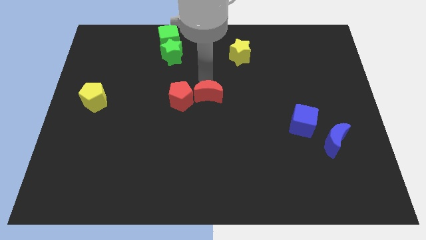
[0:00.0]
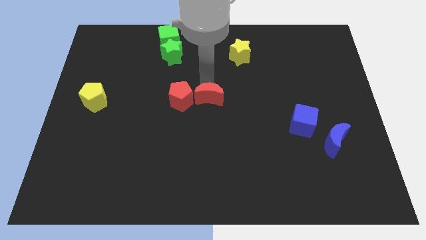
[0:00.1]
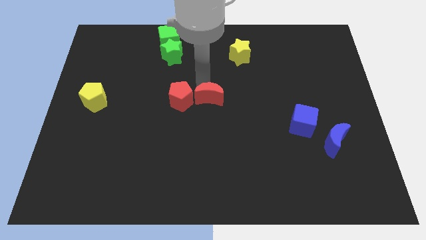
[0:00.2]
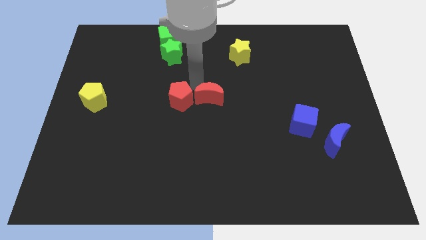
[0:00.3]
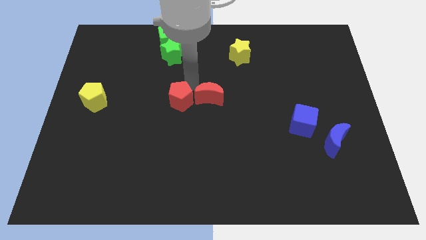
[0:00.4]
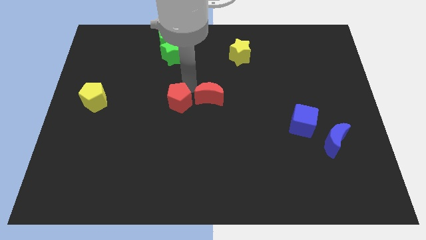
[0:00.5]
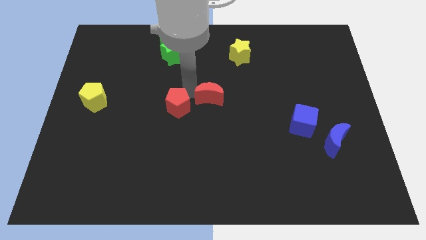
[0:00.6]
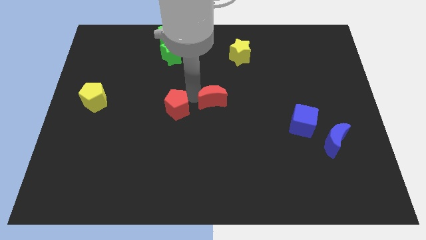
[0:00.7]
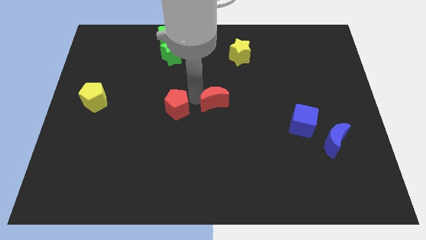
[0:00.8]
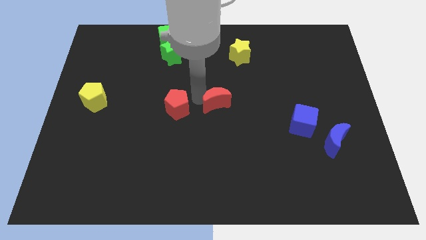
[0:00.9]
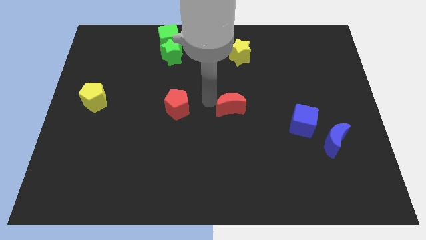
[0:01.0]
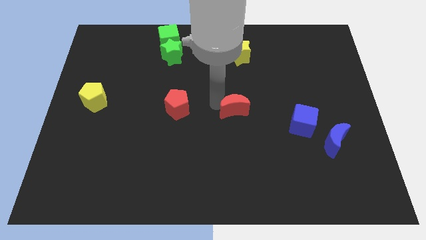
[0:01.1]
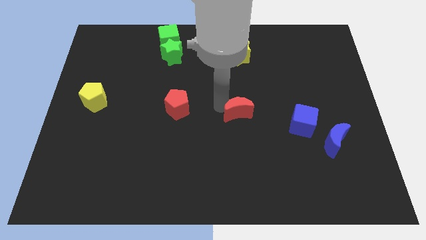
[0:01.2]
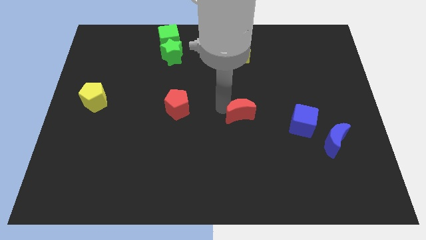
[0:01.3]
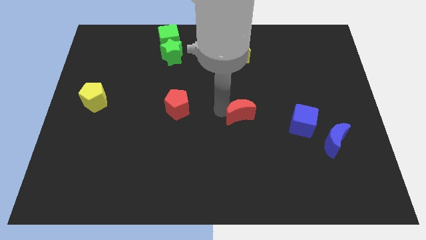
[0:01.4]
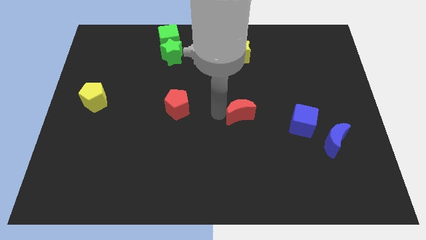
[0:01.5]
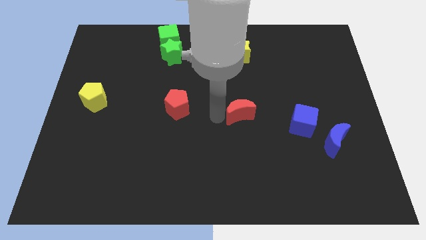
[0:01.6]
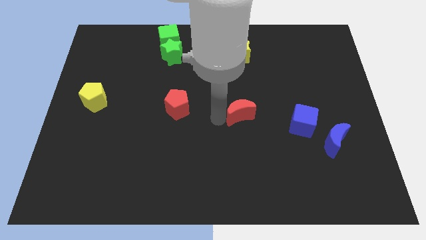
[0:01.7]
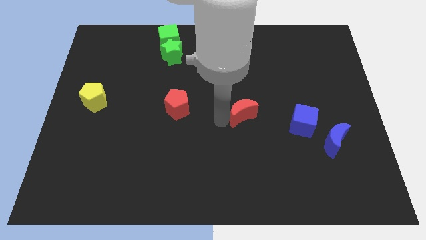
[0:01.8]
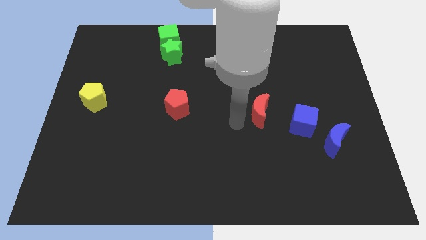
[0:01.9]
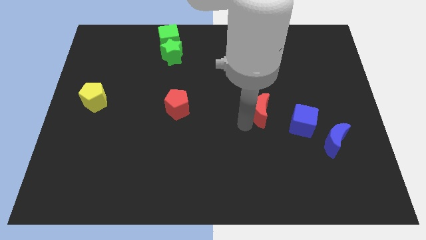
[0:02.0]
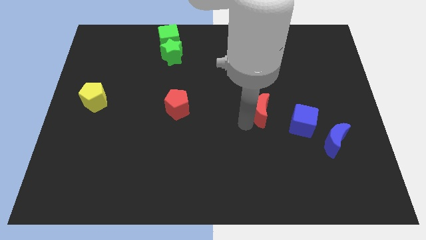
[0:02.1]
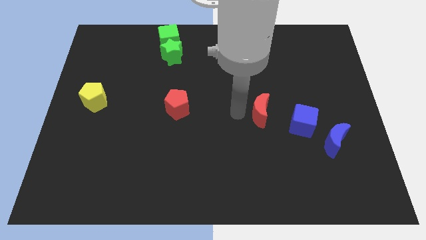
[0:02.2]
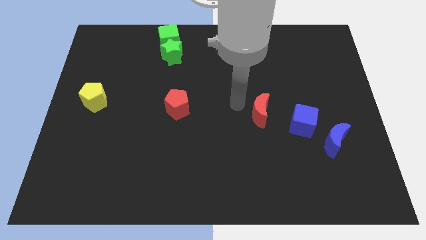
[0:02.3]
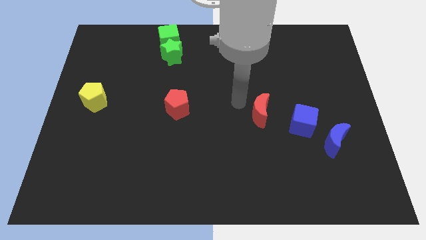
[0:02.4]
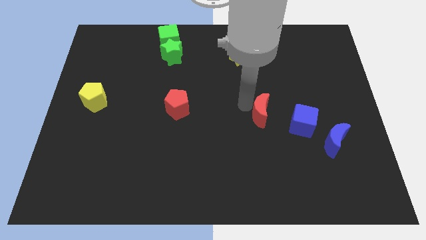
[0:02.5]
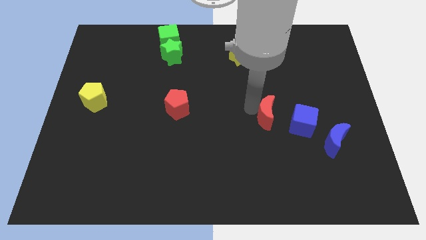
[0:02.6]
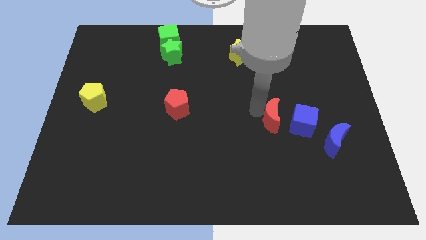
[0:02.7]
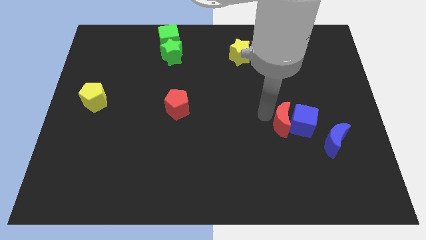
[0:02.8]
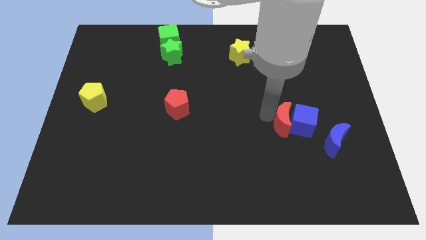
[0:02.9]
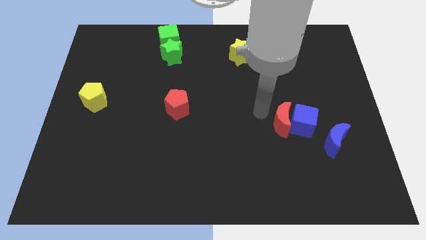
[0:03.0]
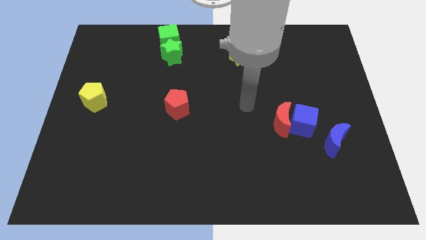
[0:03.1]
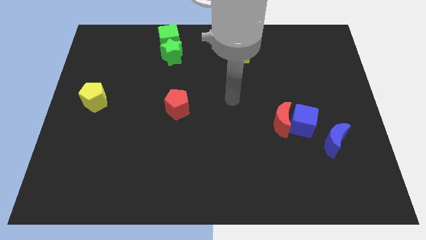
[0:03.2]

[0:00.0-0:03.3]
slide the red crescent to the left side of the blue cube

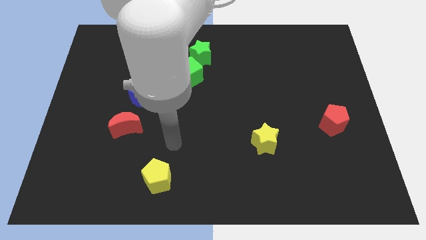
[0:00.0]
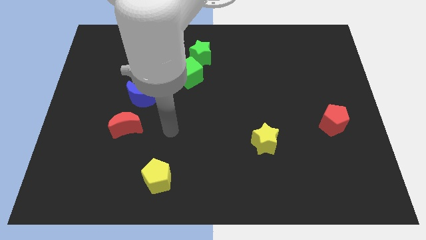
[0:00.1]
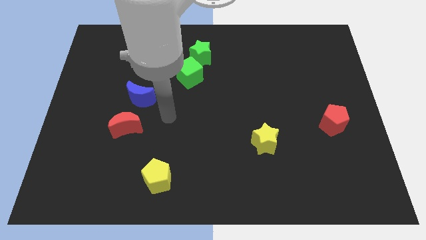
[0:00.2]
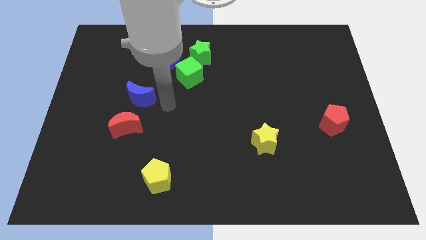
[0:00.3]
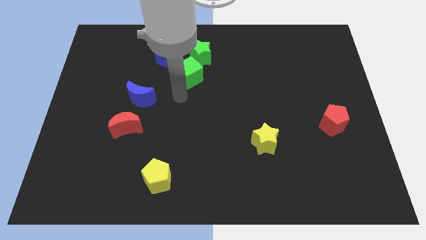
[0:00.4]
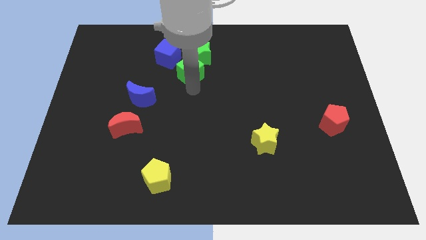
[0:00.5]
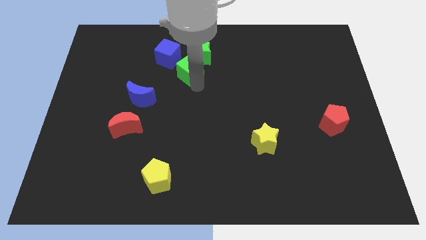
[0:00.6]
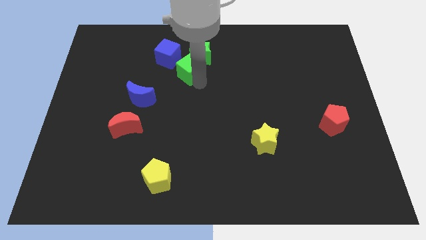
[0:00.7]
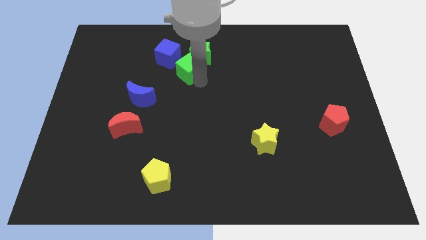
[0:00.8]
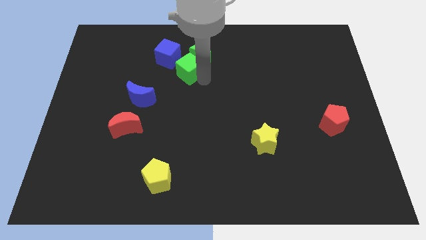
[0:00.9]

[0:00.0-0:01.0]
touch the green cube

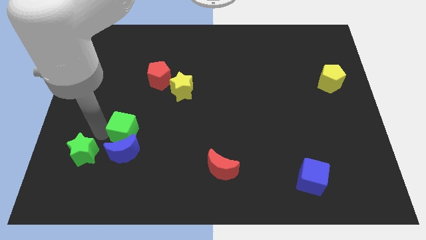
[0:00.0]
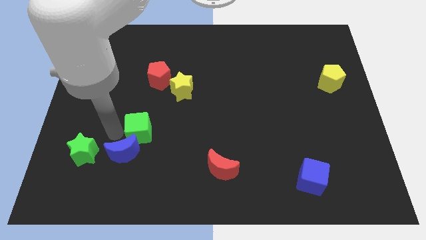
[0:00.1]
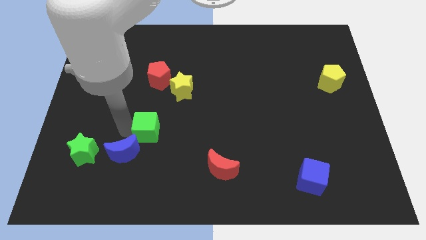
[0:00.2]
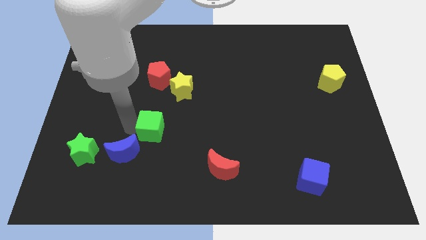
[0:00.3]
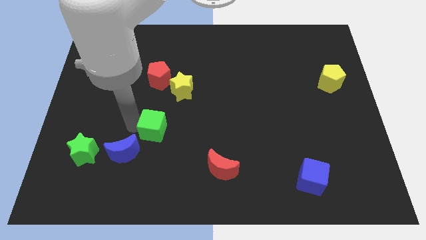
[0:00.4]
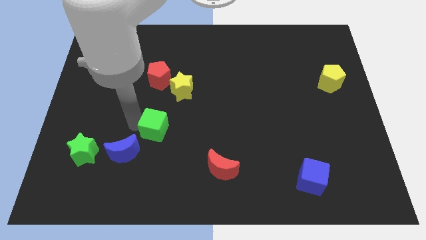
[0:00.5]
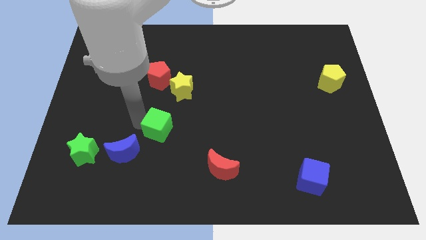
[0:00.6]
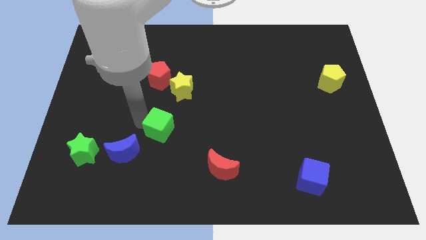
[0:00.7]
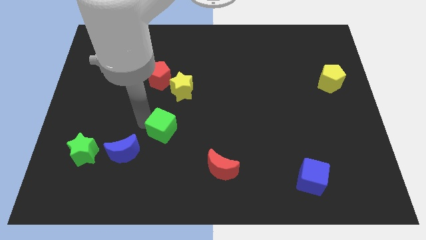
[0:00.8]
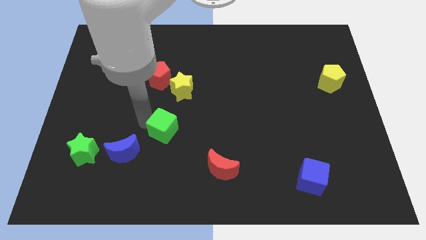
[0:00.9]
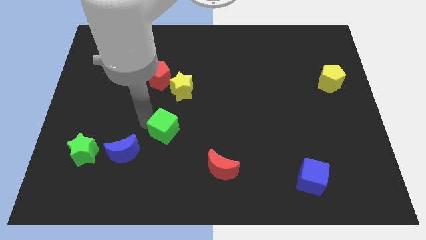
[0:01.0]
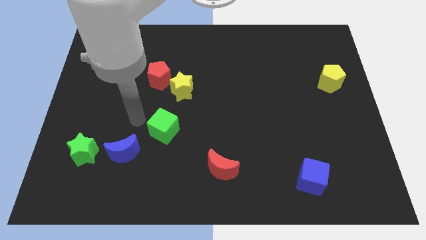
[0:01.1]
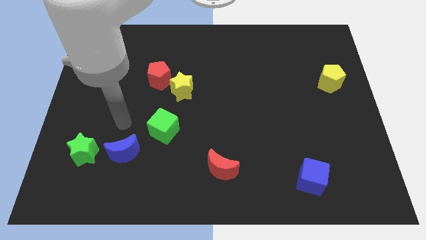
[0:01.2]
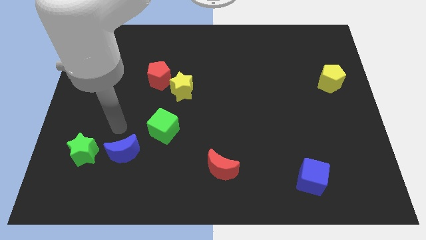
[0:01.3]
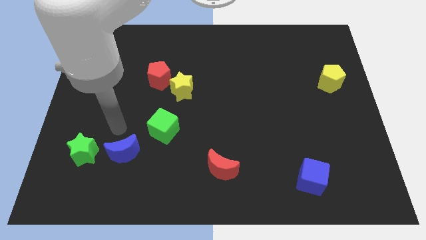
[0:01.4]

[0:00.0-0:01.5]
move the green cube slightly to the center of the board

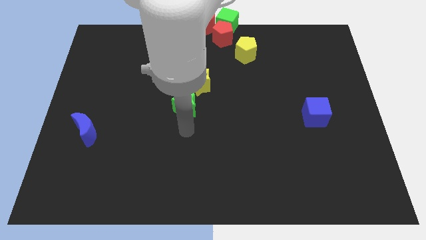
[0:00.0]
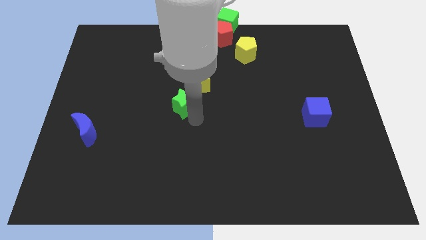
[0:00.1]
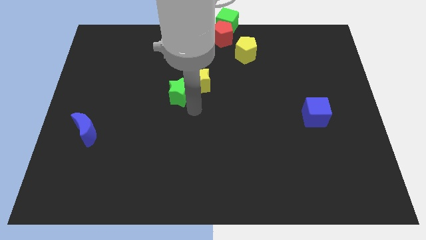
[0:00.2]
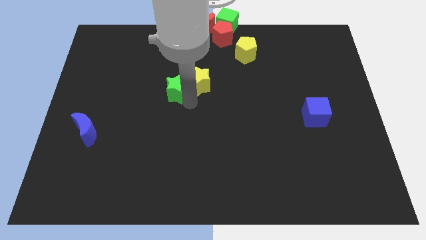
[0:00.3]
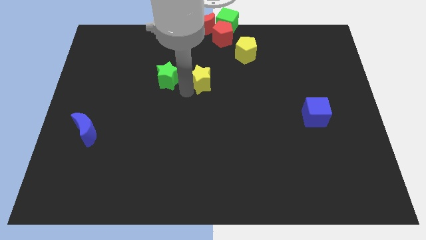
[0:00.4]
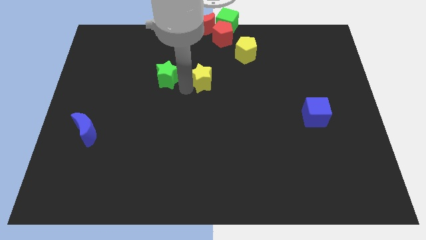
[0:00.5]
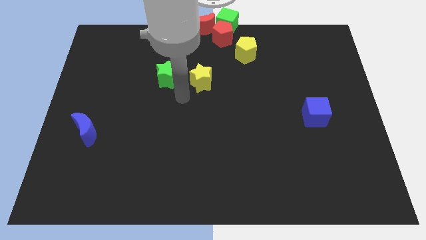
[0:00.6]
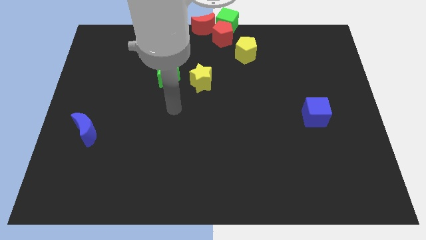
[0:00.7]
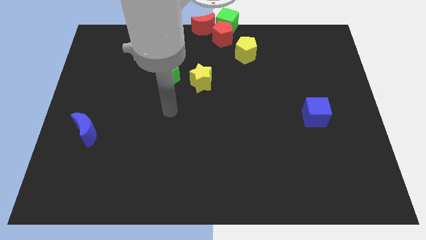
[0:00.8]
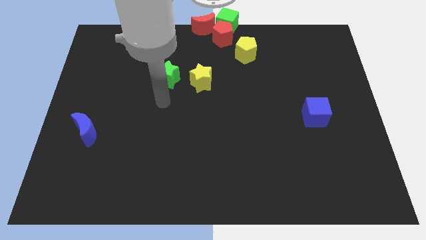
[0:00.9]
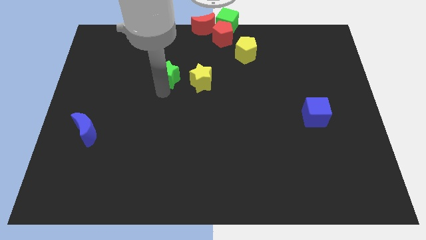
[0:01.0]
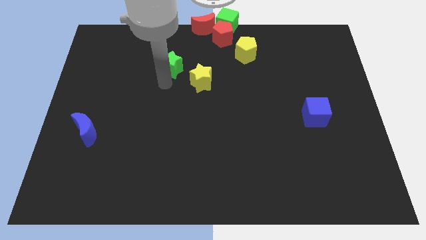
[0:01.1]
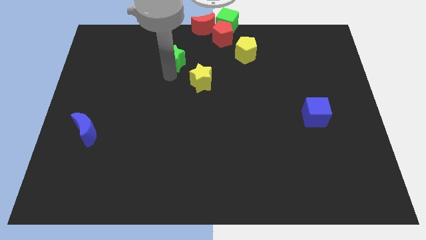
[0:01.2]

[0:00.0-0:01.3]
separate the green star from the yellow star

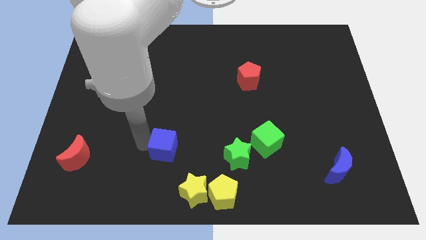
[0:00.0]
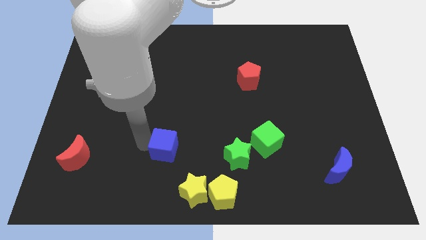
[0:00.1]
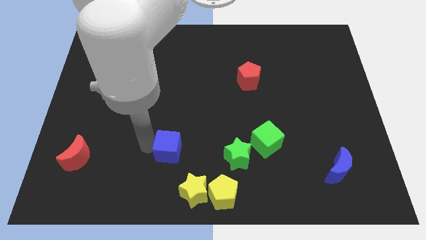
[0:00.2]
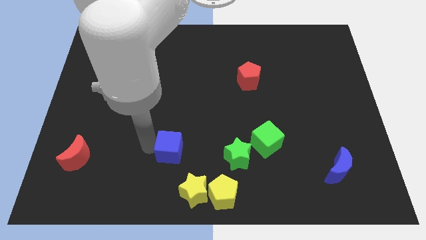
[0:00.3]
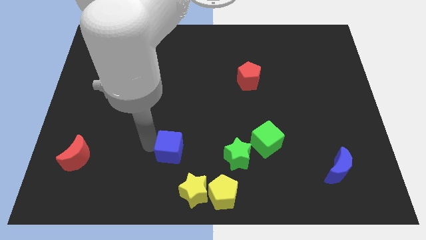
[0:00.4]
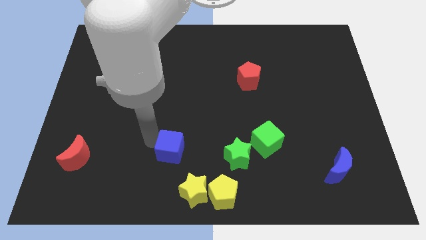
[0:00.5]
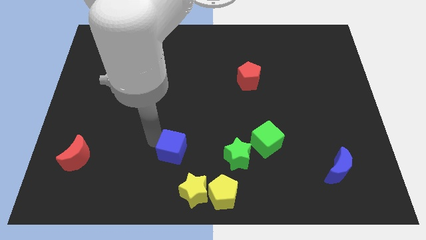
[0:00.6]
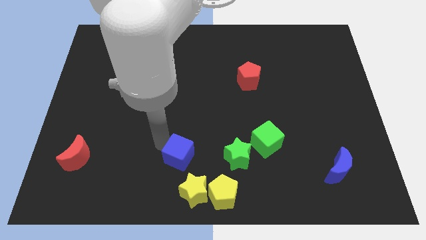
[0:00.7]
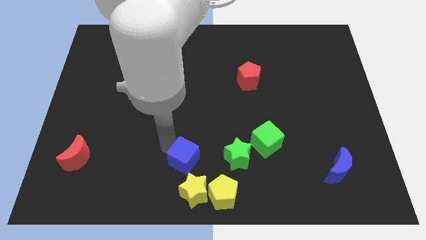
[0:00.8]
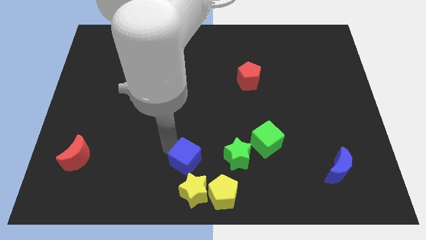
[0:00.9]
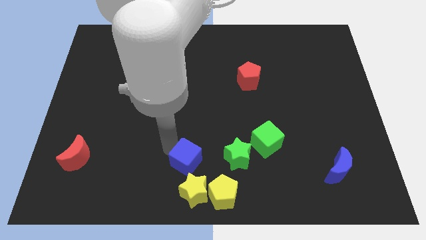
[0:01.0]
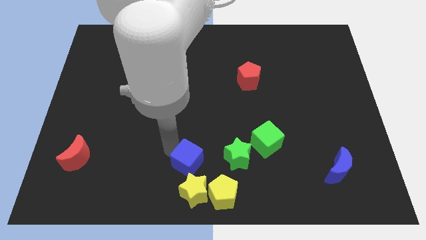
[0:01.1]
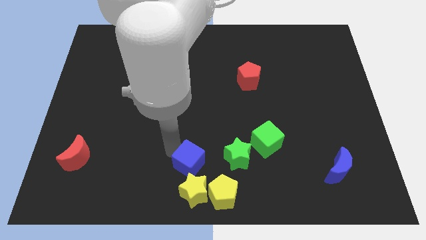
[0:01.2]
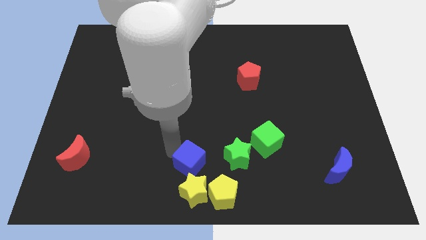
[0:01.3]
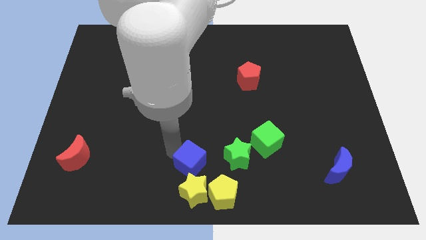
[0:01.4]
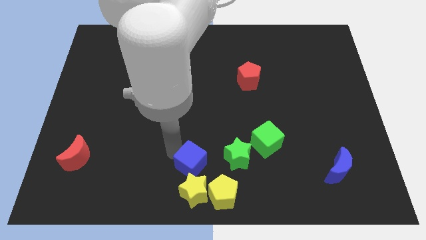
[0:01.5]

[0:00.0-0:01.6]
place blue cube above the yellow star

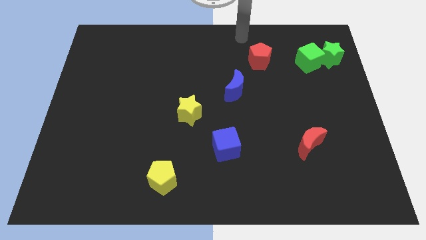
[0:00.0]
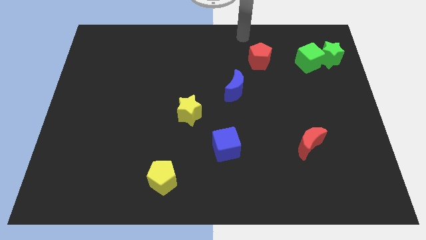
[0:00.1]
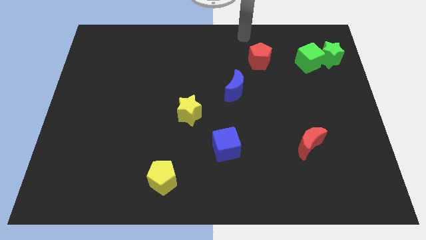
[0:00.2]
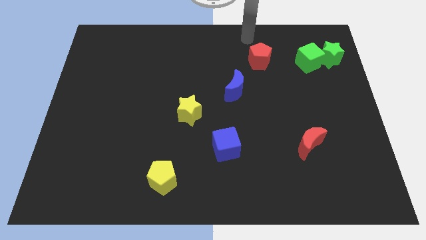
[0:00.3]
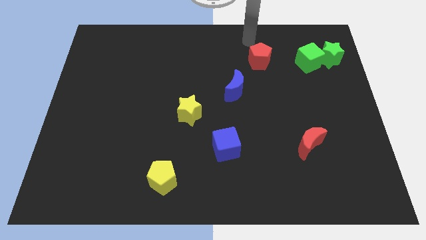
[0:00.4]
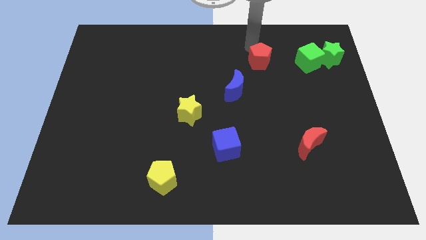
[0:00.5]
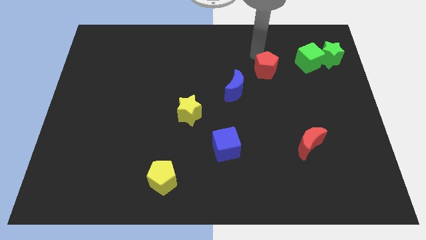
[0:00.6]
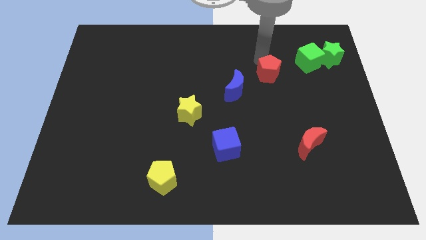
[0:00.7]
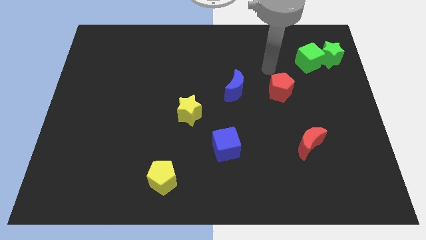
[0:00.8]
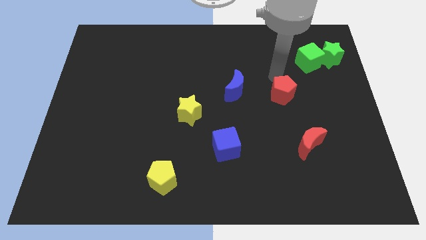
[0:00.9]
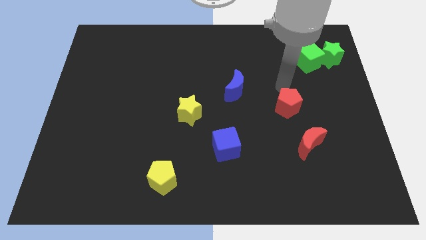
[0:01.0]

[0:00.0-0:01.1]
place red pentagon to the top left of red moon
